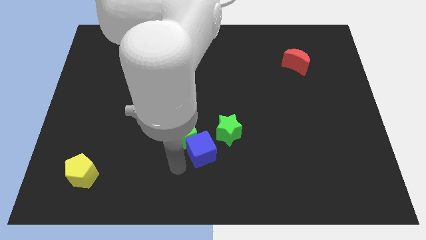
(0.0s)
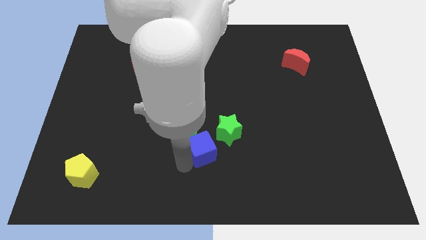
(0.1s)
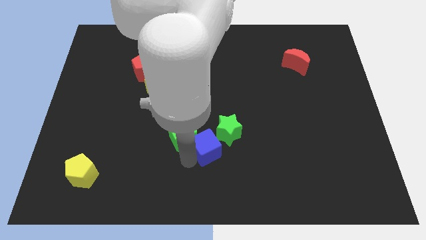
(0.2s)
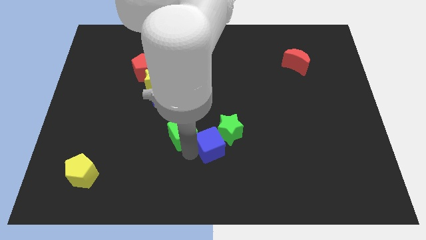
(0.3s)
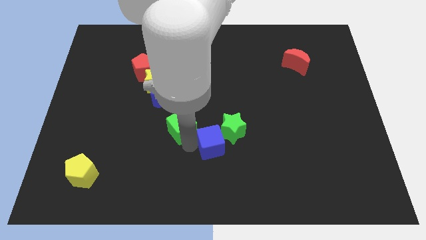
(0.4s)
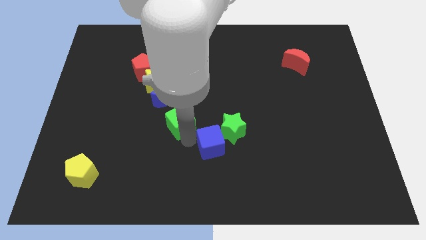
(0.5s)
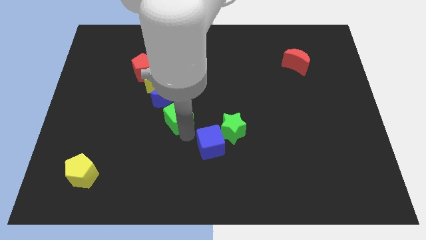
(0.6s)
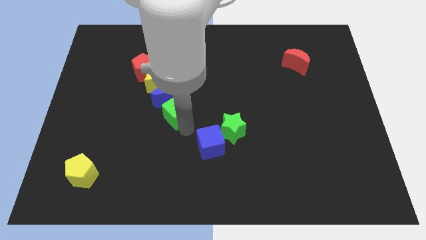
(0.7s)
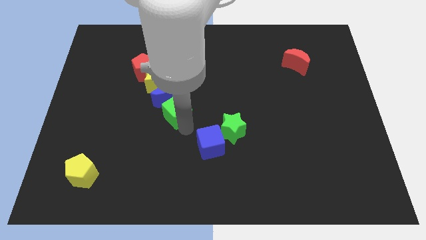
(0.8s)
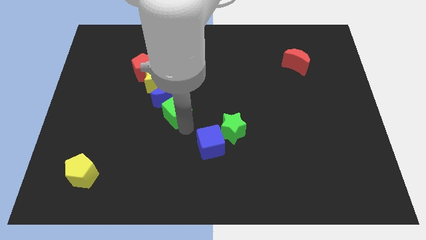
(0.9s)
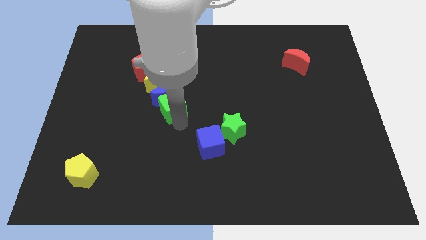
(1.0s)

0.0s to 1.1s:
separate the green cube and blue cube

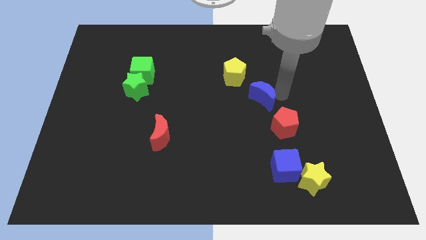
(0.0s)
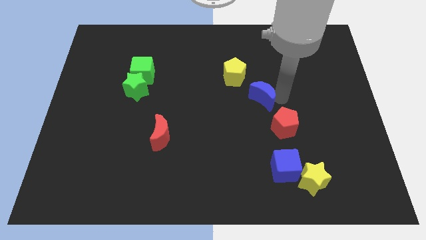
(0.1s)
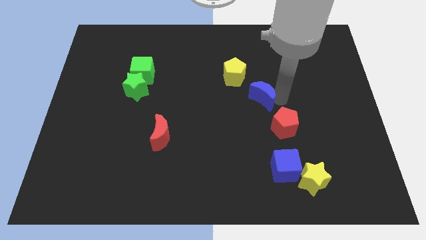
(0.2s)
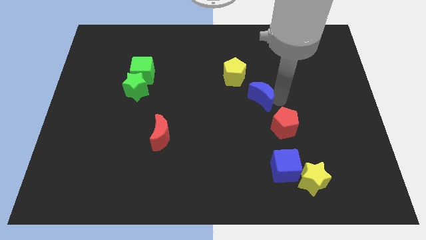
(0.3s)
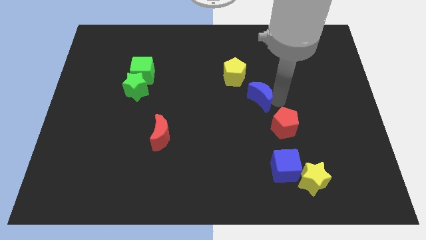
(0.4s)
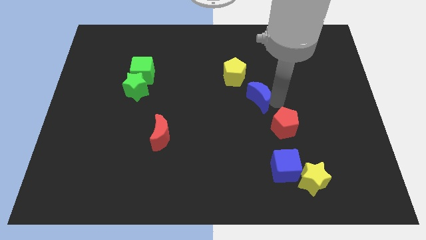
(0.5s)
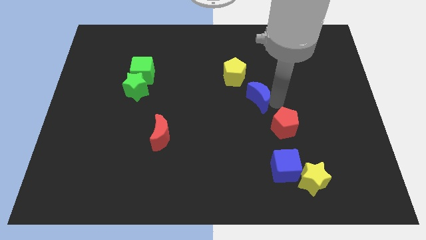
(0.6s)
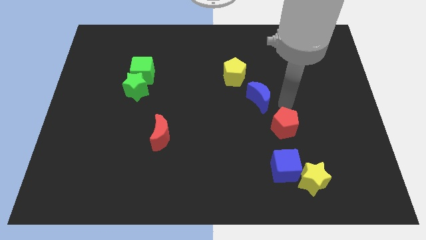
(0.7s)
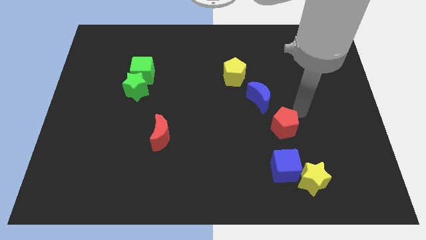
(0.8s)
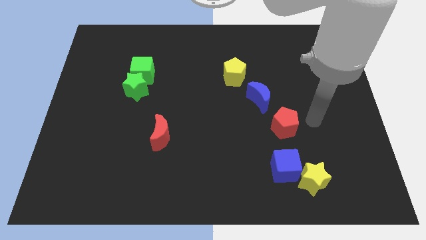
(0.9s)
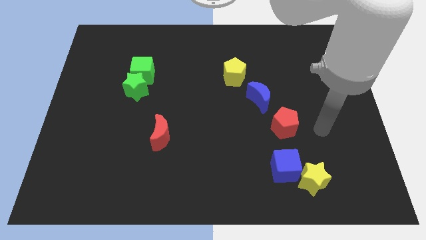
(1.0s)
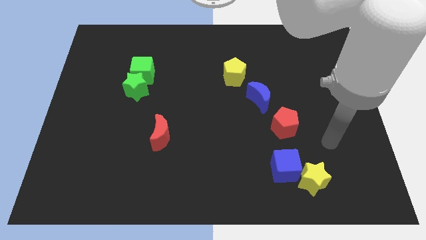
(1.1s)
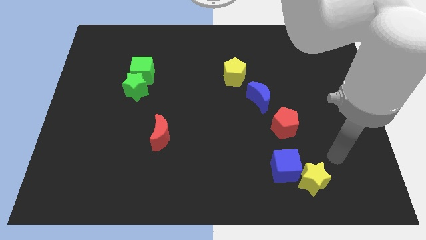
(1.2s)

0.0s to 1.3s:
slide the blue moon diagonally in between yellow pentagon and red pentagon

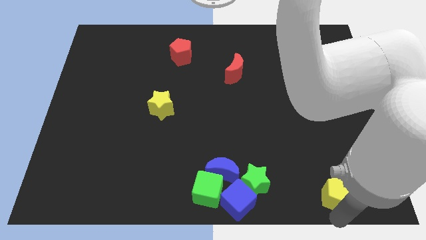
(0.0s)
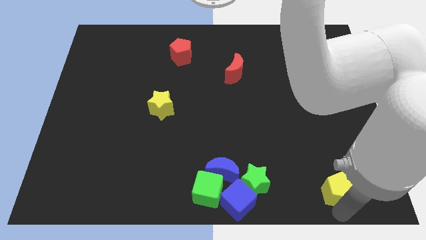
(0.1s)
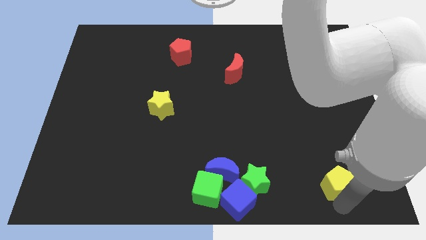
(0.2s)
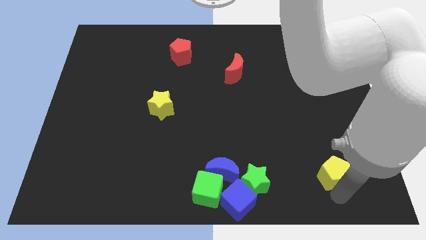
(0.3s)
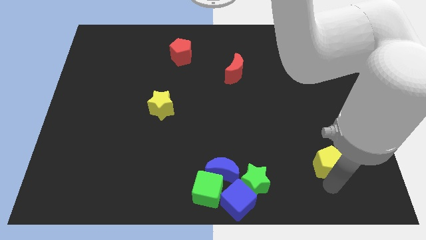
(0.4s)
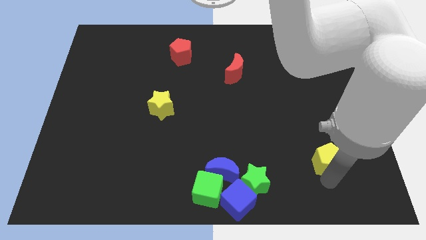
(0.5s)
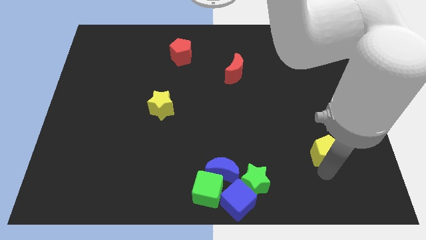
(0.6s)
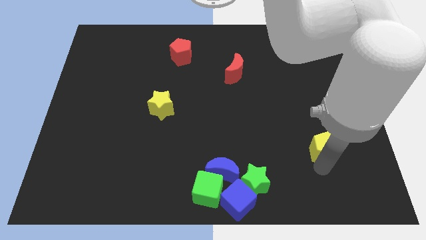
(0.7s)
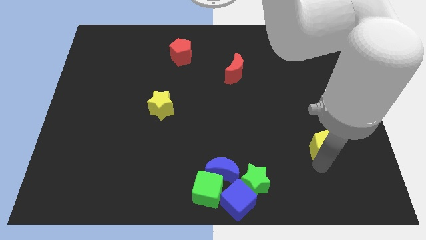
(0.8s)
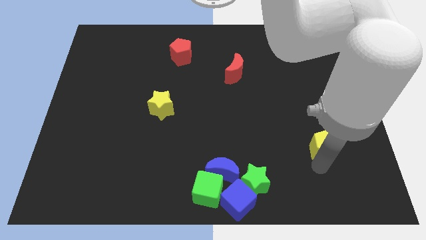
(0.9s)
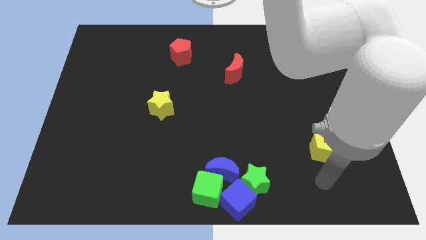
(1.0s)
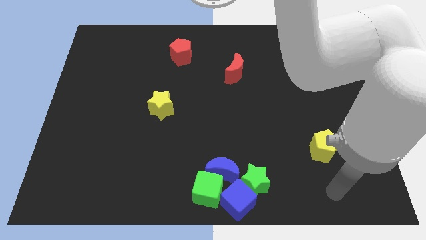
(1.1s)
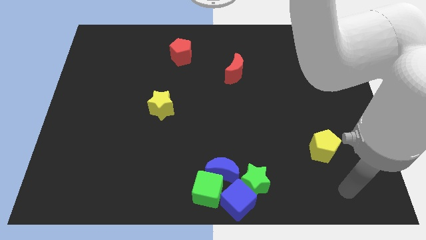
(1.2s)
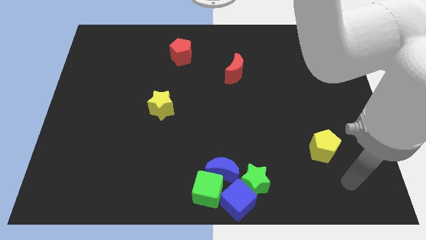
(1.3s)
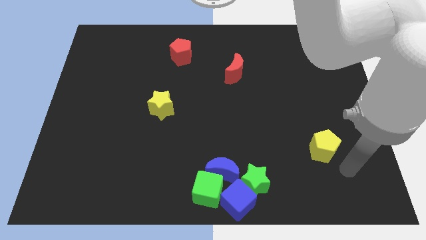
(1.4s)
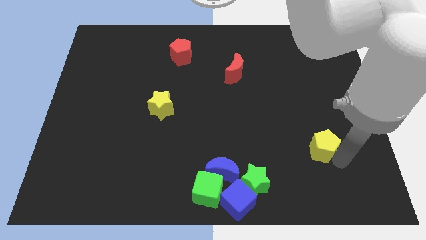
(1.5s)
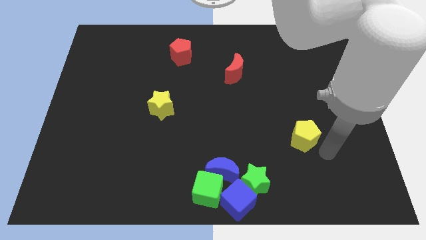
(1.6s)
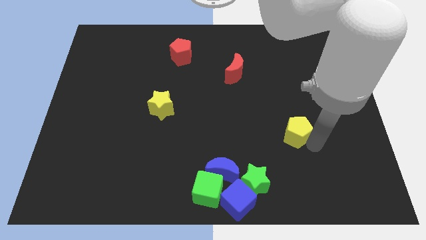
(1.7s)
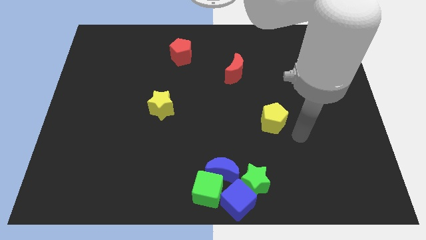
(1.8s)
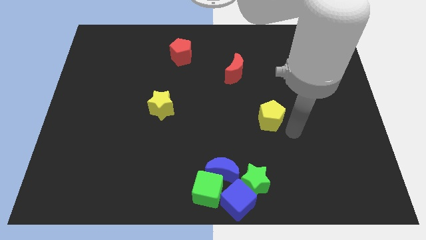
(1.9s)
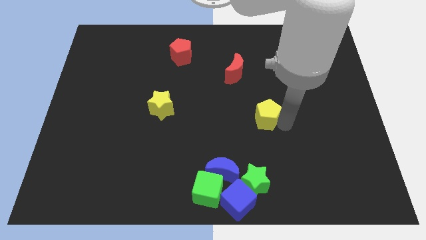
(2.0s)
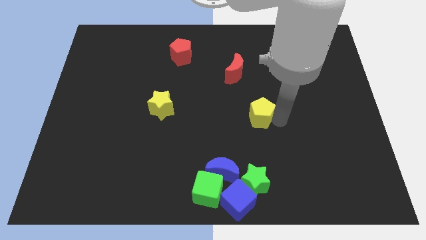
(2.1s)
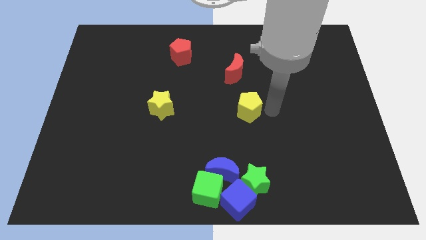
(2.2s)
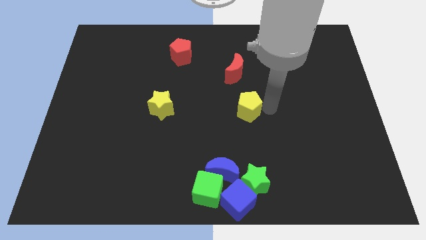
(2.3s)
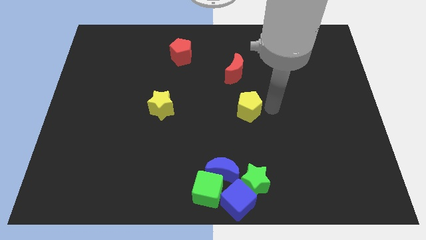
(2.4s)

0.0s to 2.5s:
move the yellow pentagon diagonally up

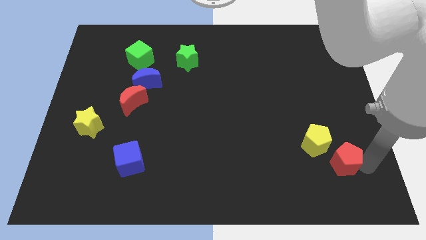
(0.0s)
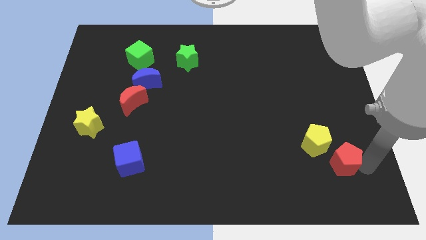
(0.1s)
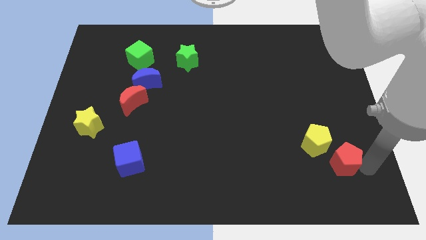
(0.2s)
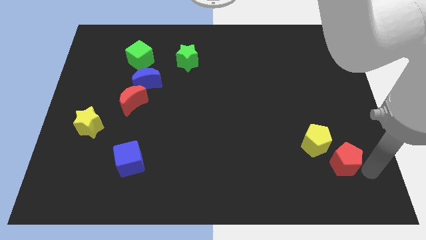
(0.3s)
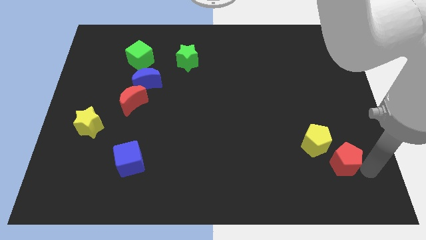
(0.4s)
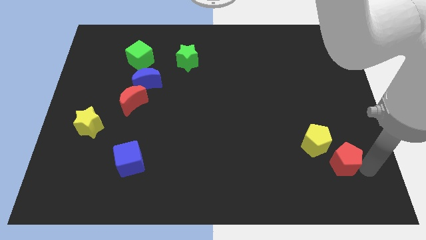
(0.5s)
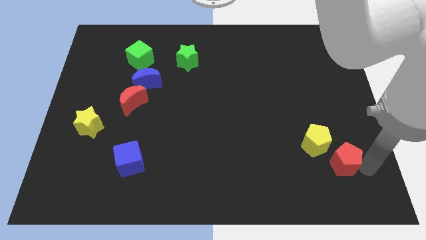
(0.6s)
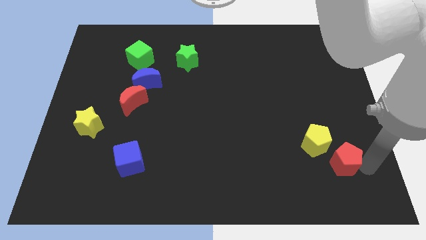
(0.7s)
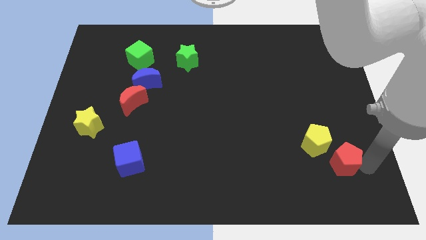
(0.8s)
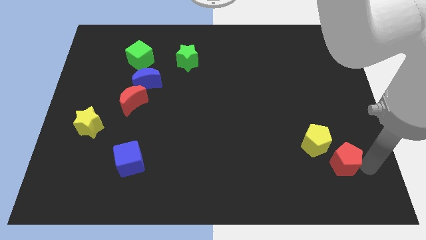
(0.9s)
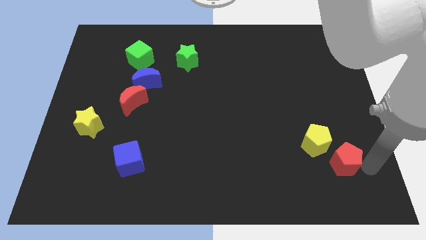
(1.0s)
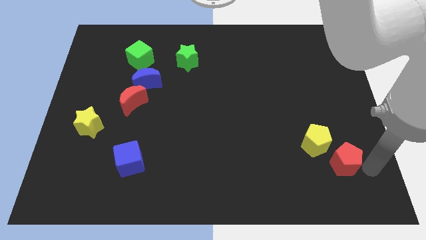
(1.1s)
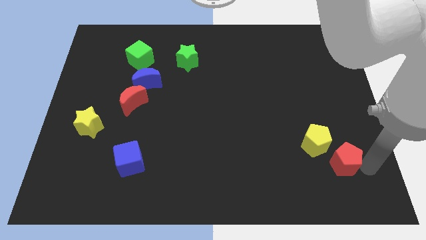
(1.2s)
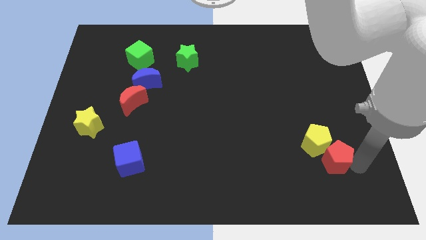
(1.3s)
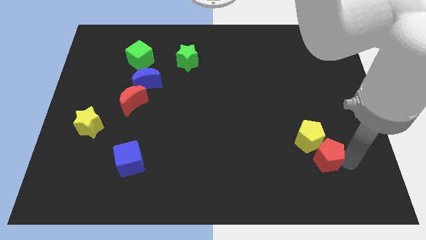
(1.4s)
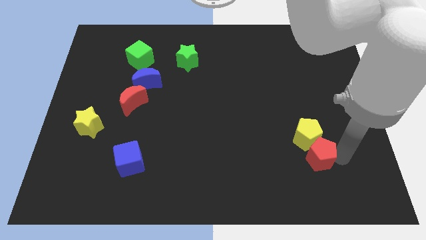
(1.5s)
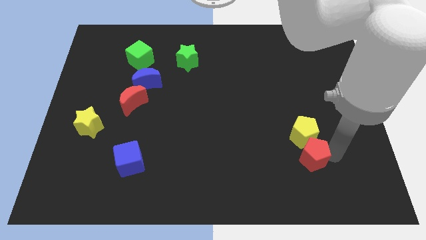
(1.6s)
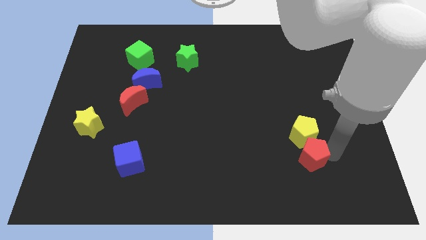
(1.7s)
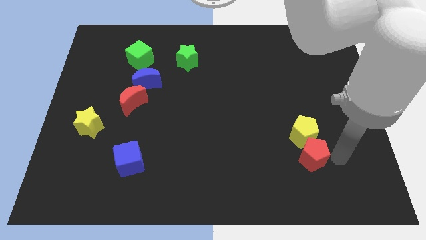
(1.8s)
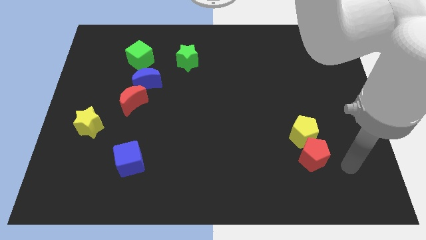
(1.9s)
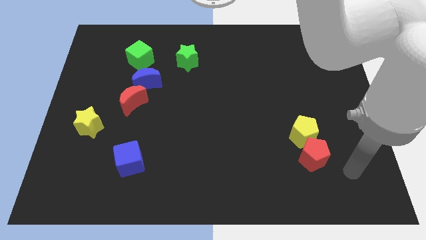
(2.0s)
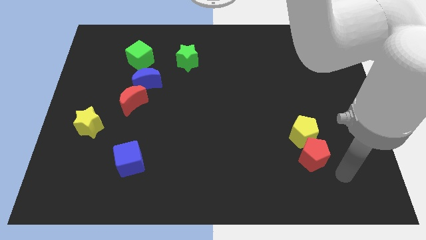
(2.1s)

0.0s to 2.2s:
move the red pentagon into the yellow pentagon

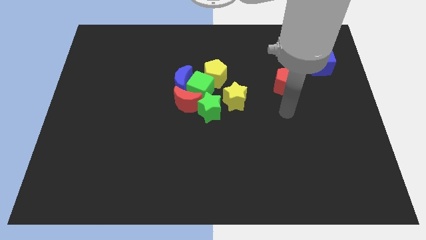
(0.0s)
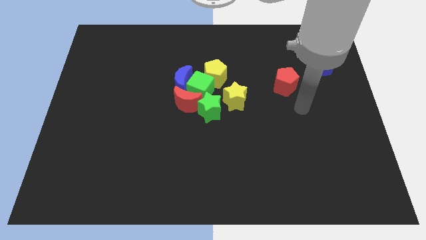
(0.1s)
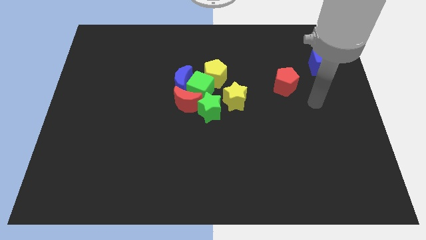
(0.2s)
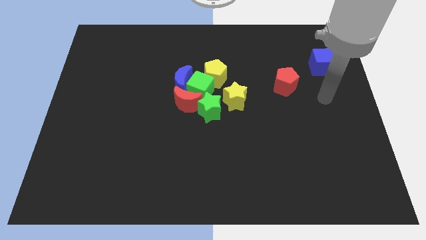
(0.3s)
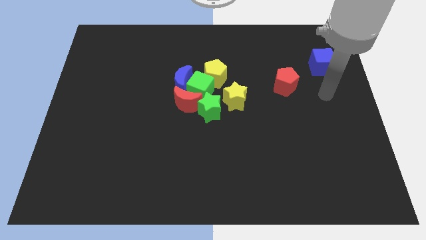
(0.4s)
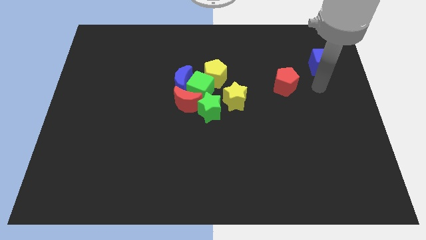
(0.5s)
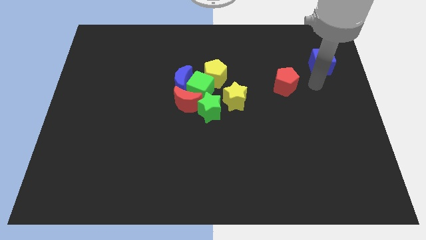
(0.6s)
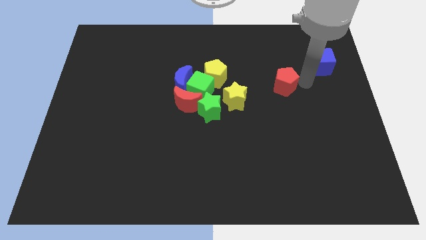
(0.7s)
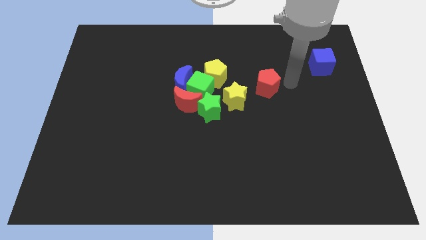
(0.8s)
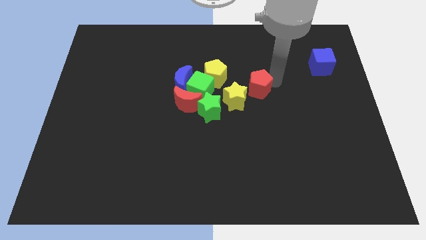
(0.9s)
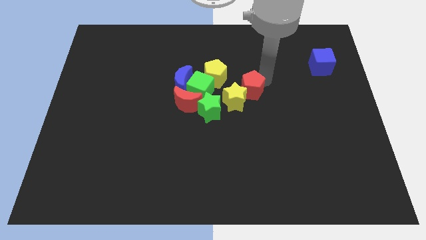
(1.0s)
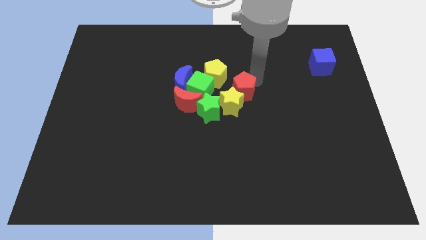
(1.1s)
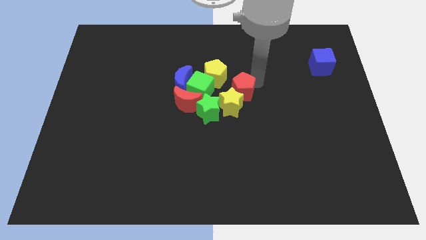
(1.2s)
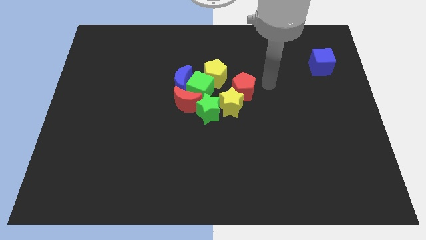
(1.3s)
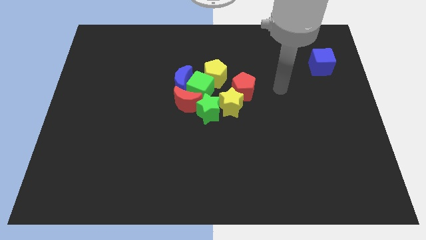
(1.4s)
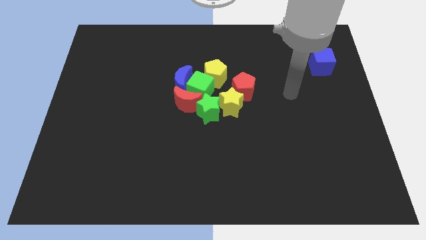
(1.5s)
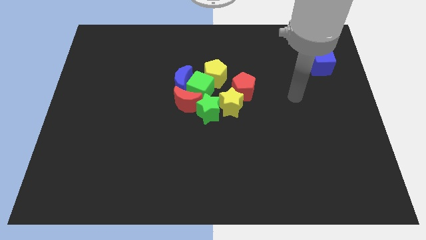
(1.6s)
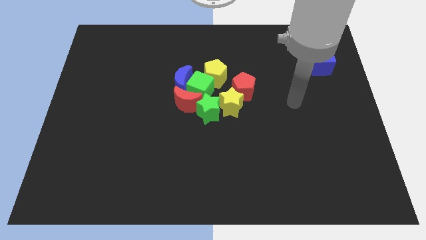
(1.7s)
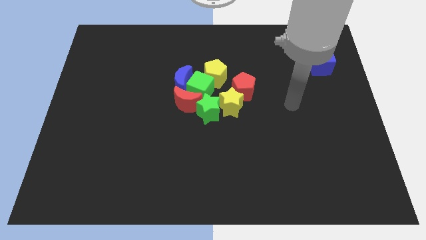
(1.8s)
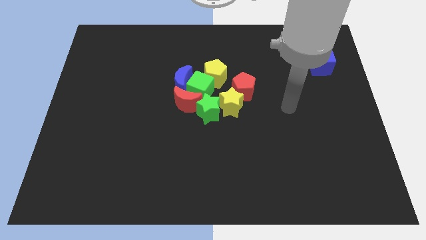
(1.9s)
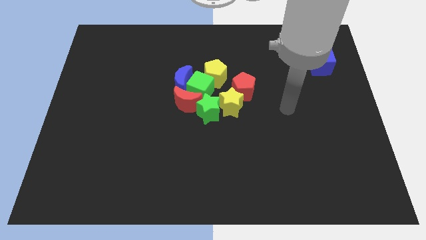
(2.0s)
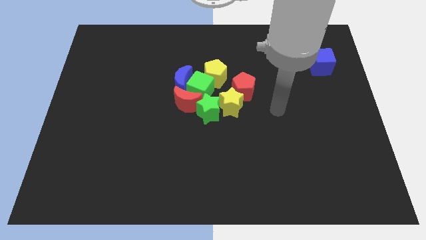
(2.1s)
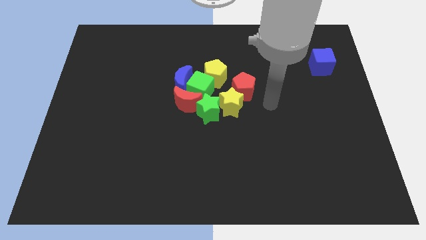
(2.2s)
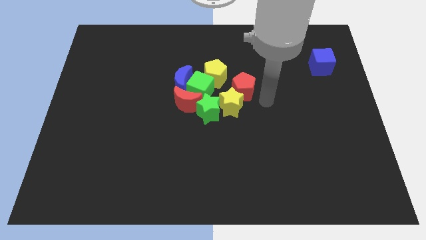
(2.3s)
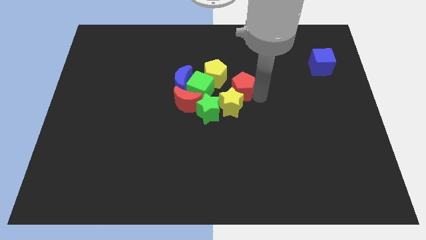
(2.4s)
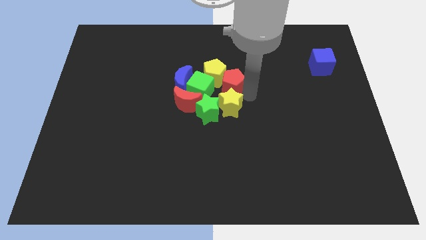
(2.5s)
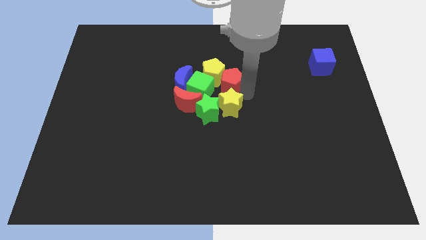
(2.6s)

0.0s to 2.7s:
push the yellow star into the green star with the red pentagon
